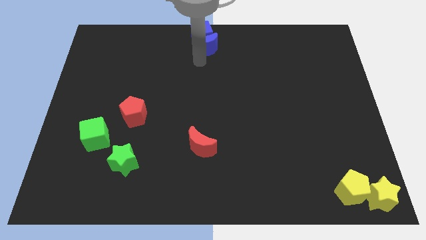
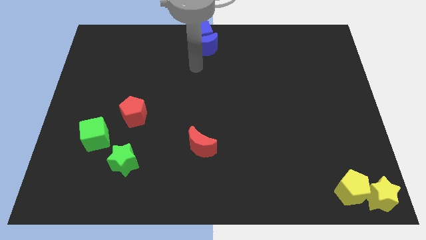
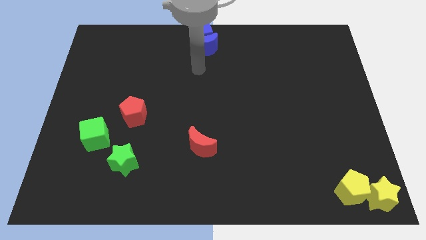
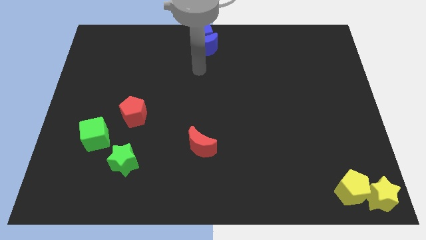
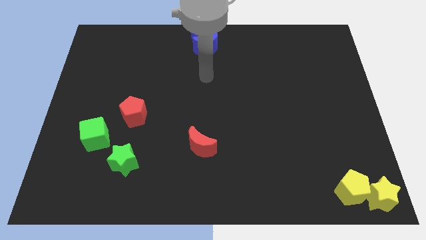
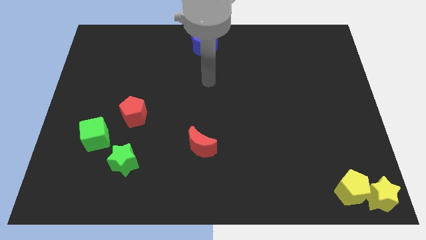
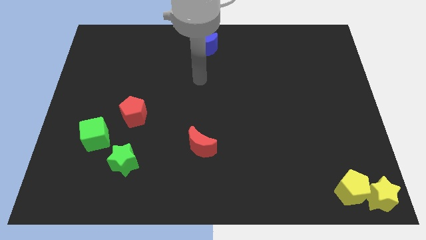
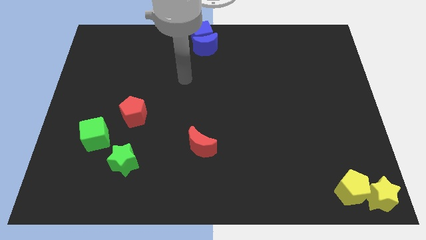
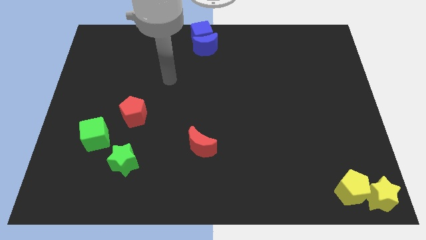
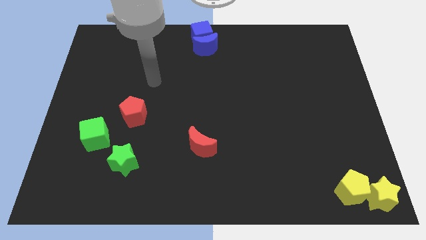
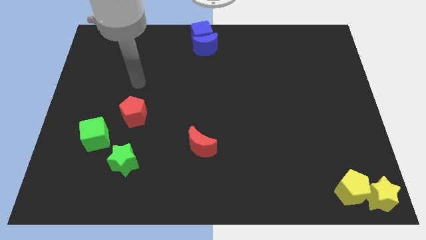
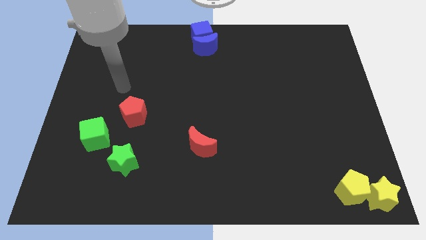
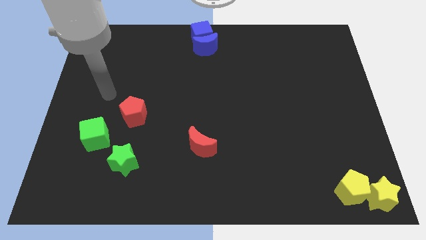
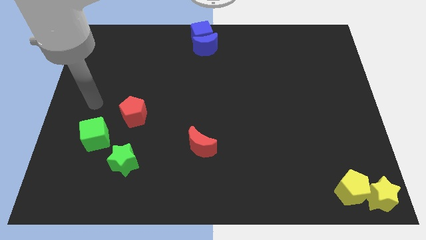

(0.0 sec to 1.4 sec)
move your arm away from the blue moon

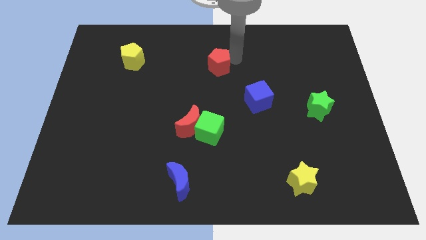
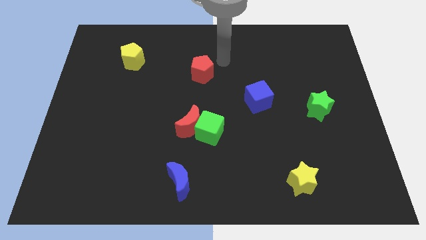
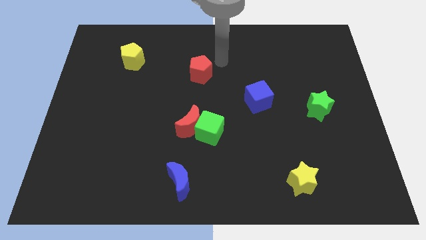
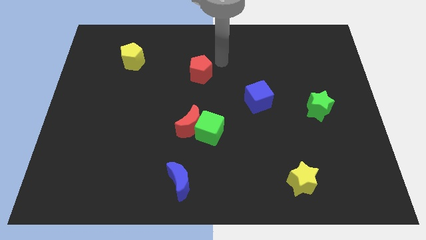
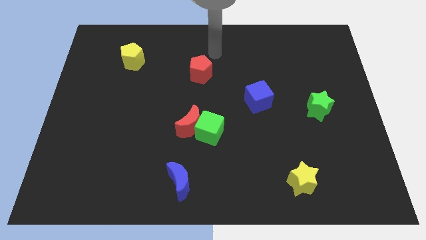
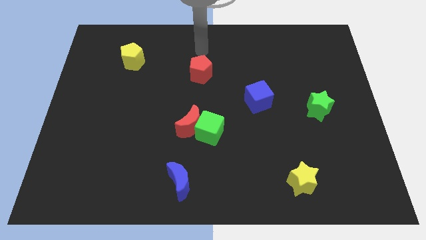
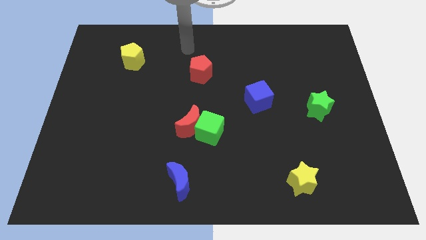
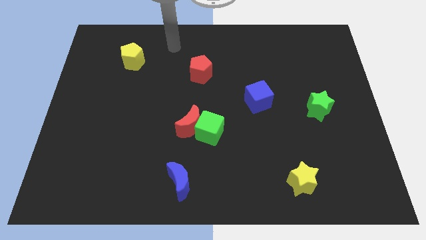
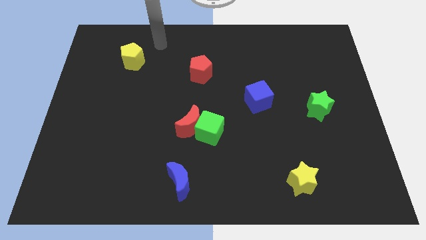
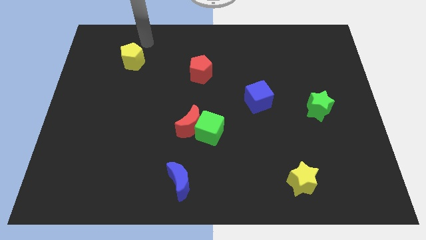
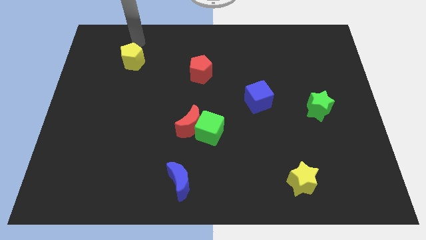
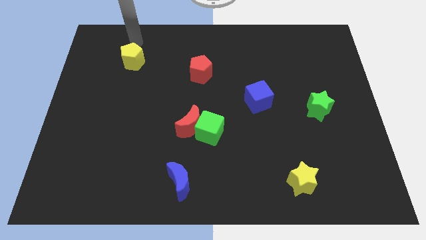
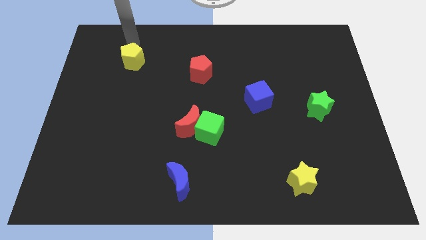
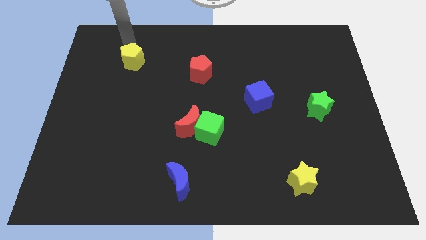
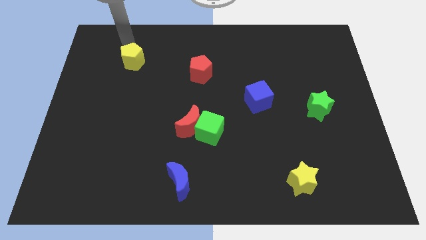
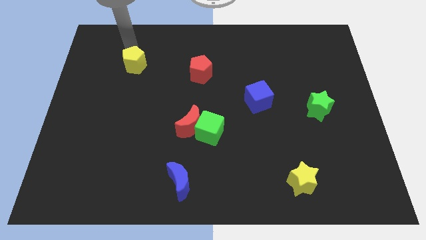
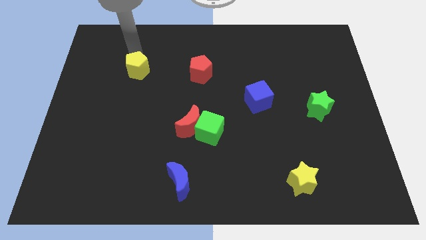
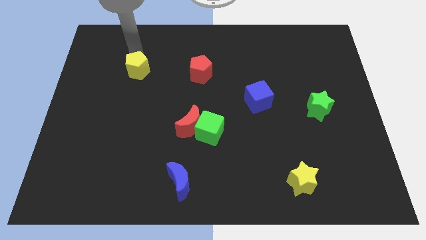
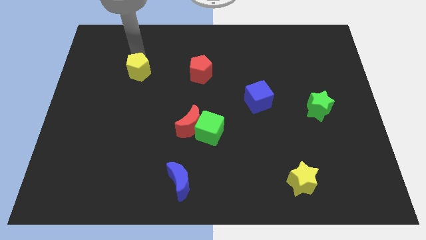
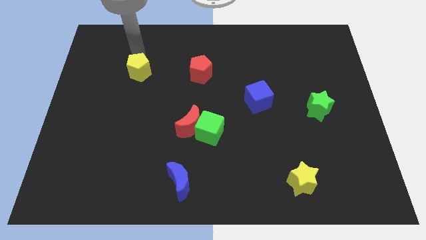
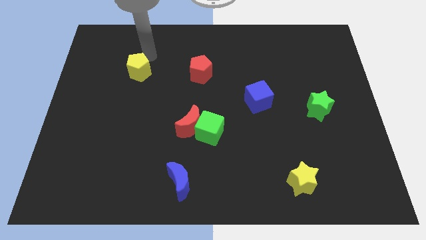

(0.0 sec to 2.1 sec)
move yellow pentagon in parallel with red pentagon

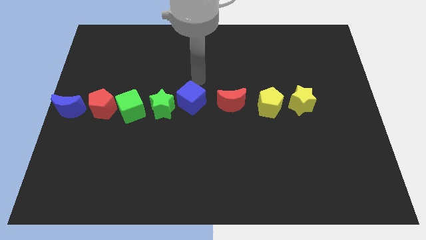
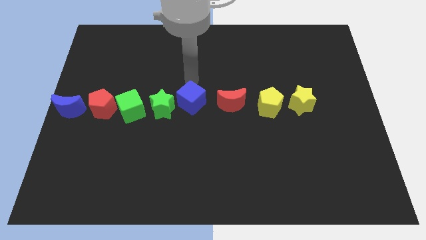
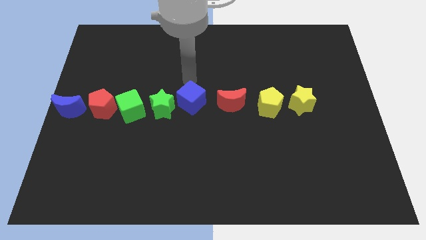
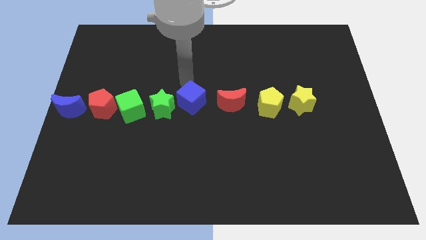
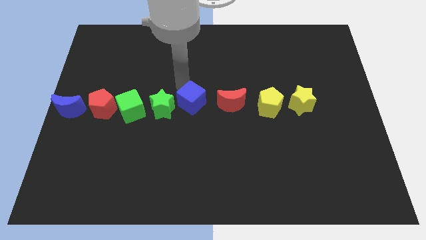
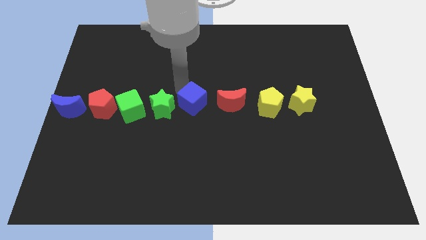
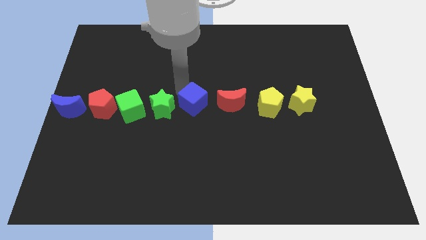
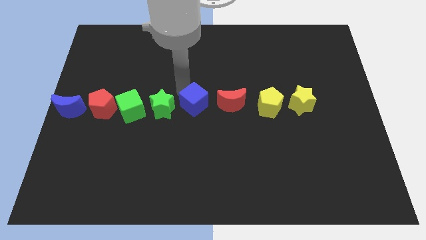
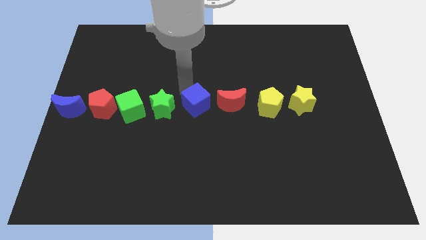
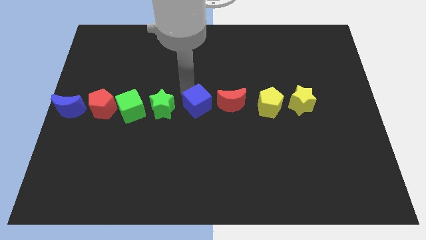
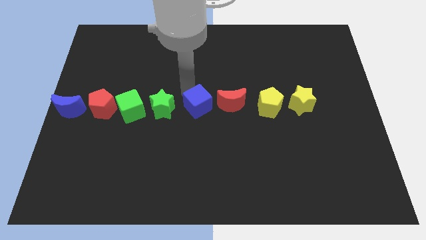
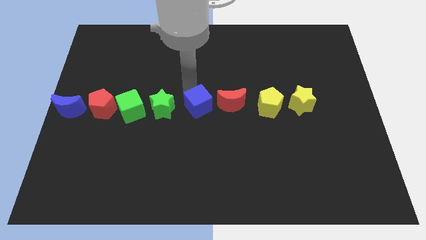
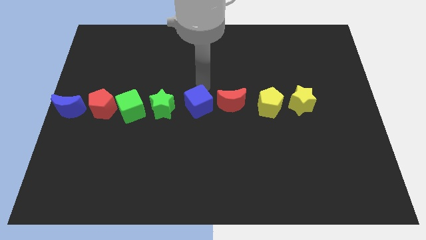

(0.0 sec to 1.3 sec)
place the blue cube horizontally with red crescent

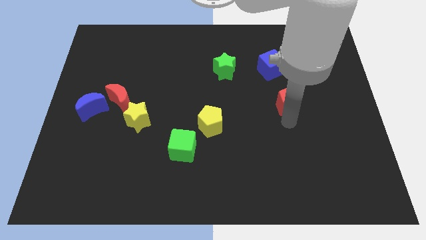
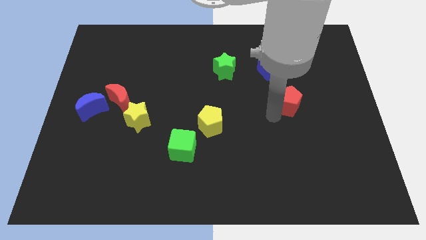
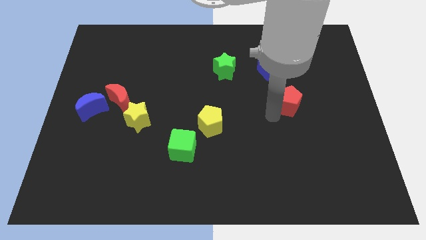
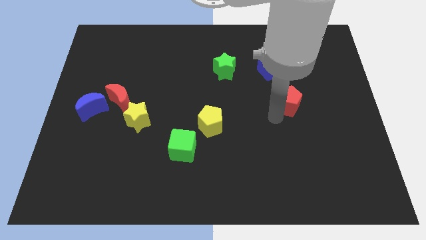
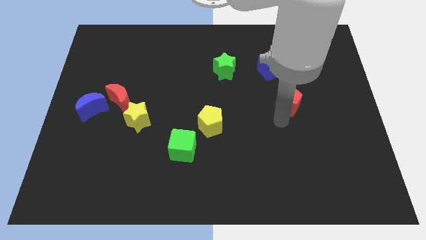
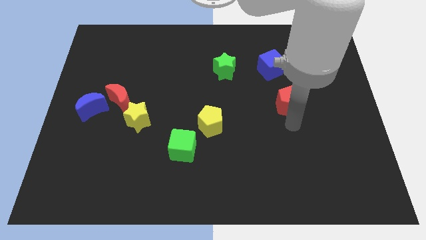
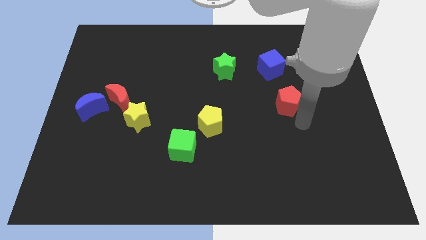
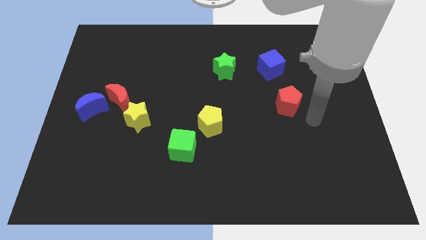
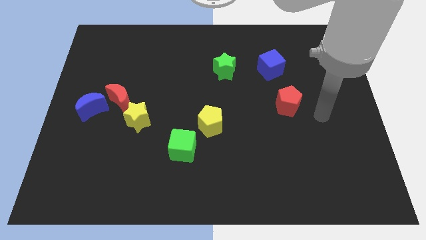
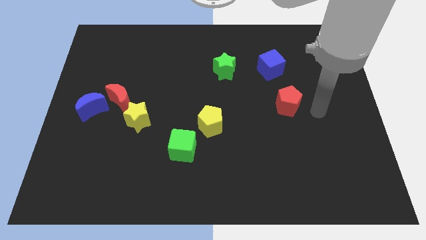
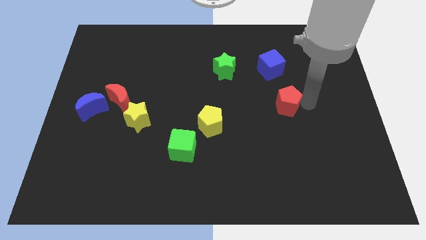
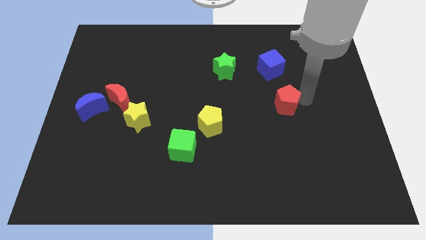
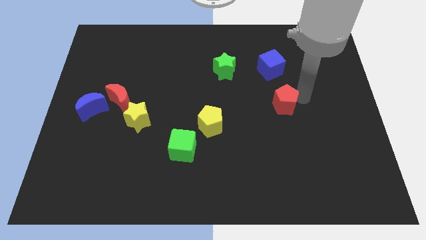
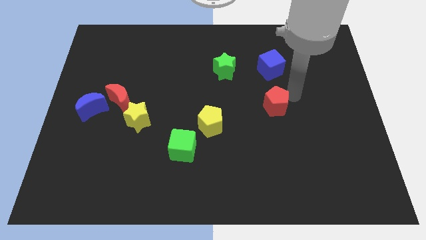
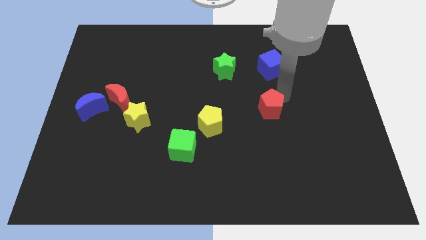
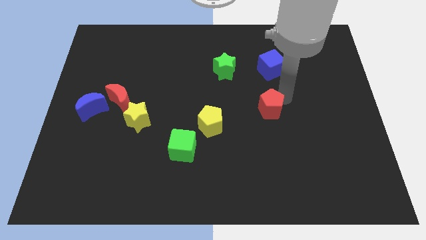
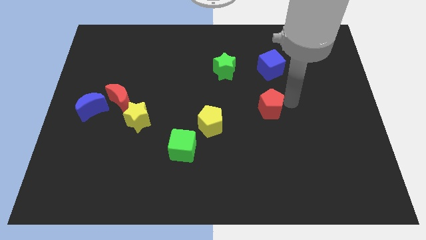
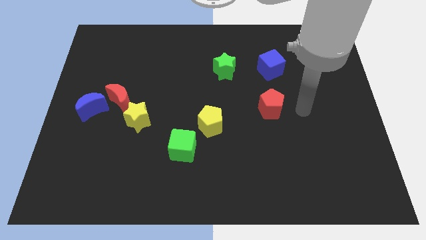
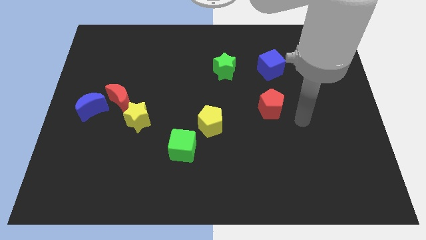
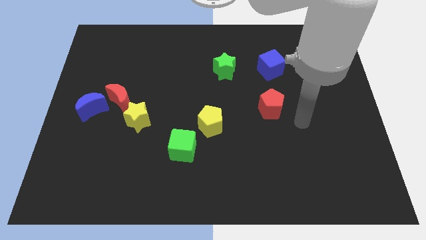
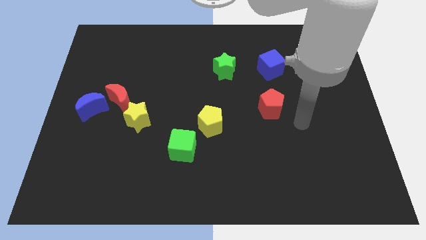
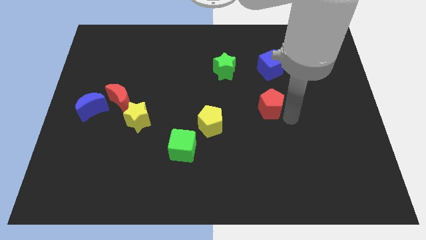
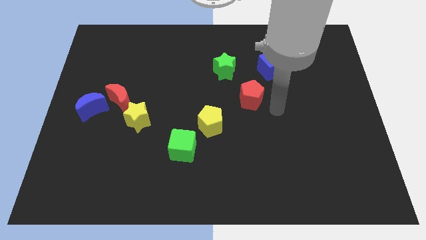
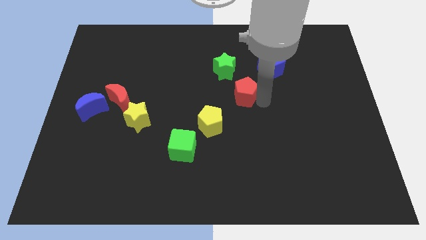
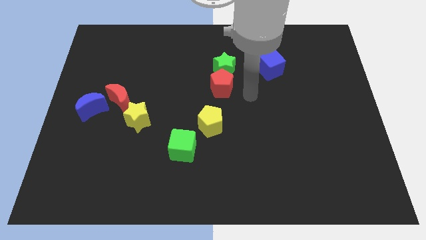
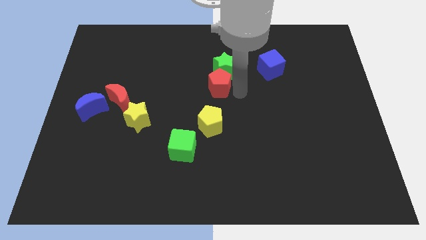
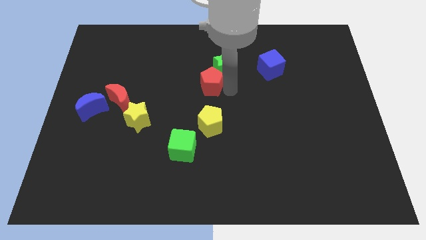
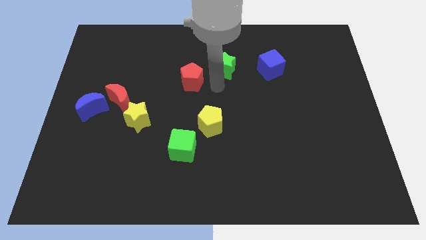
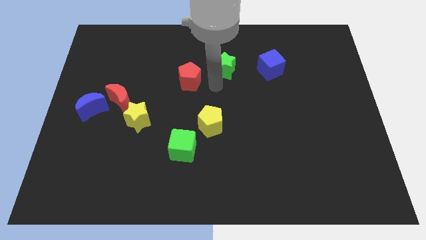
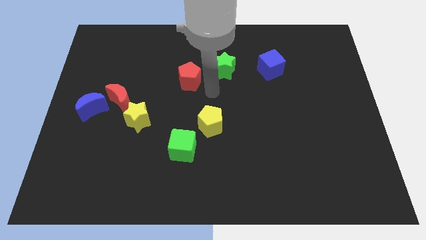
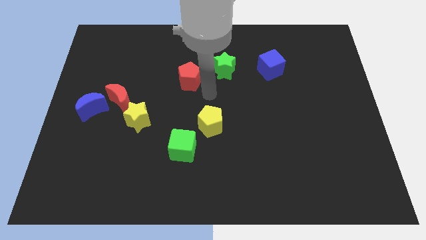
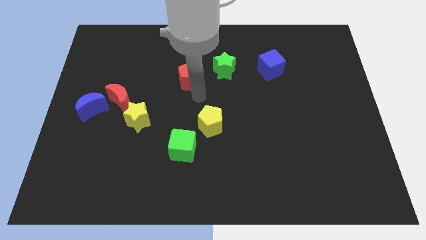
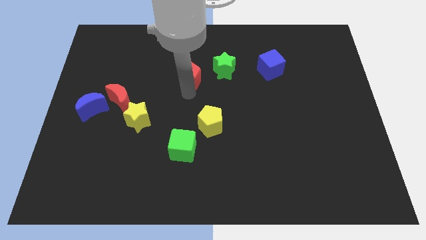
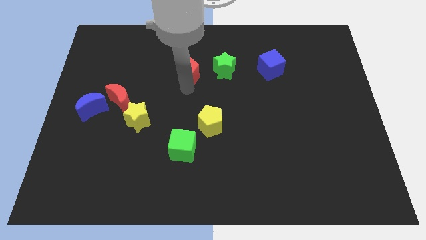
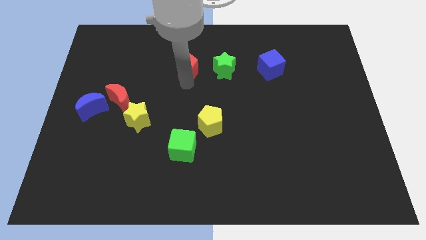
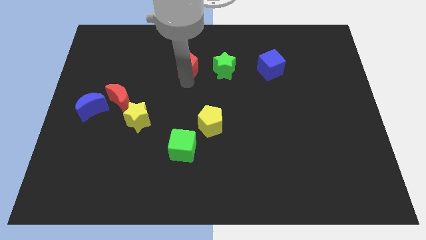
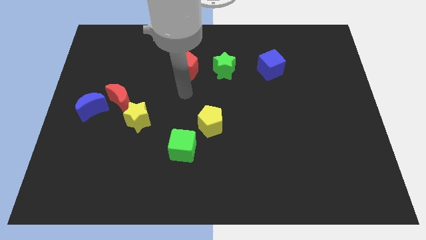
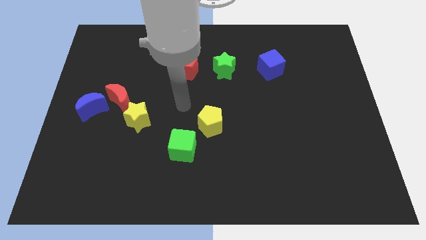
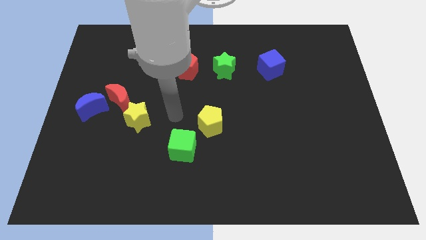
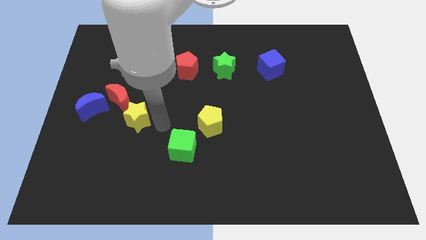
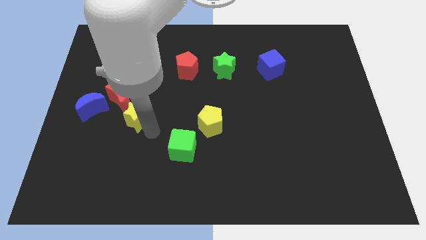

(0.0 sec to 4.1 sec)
move the red pentagon to the left of the green star
